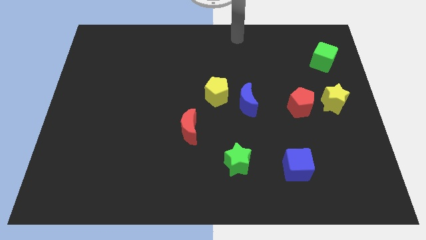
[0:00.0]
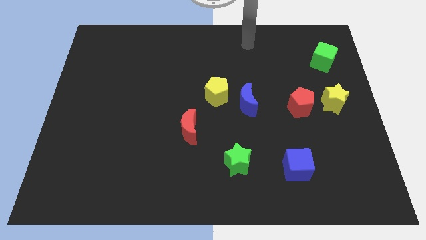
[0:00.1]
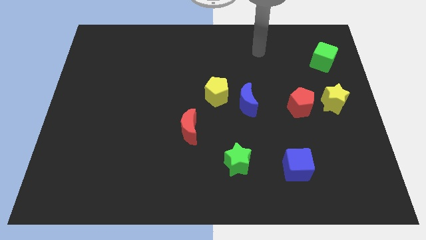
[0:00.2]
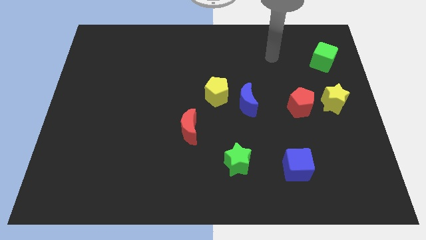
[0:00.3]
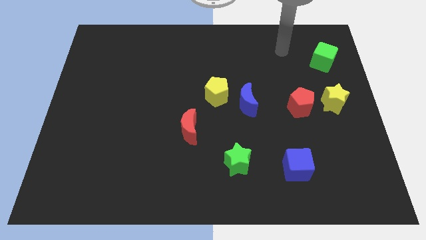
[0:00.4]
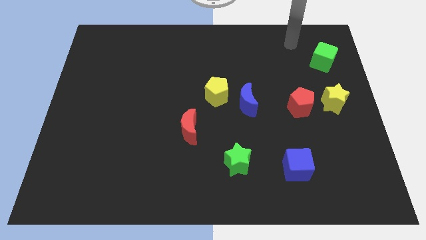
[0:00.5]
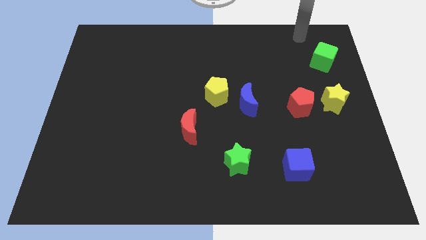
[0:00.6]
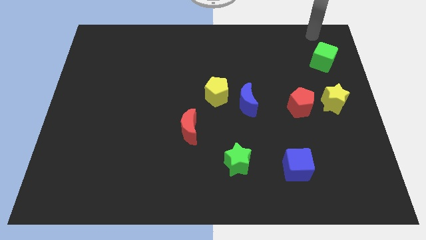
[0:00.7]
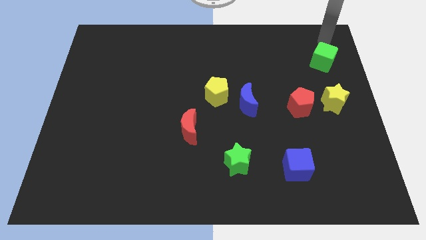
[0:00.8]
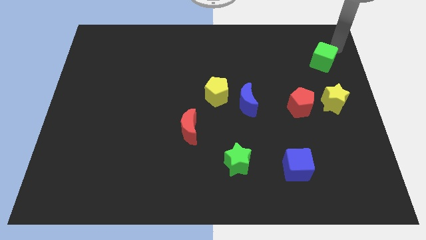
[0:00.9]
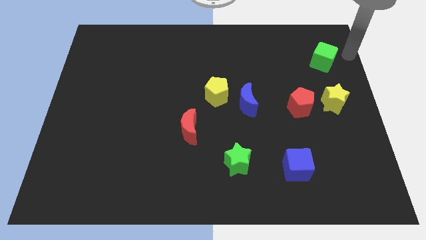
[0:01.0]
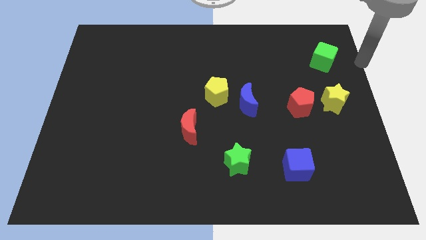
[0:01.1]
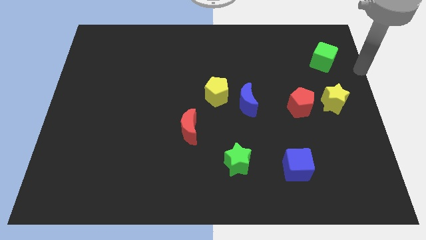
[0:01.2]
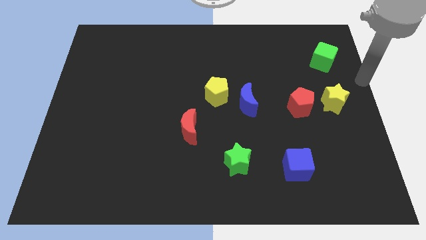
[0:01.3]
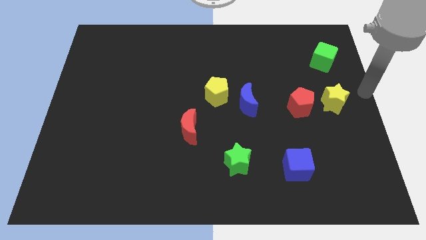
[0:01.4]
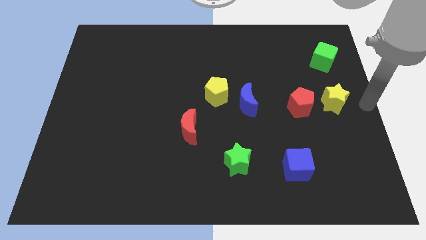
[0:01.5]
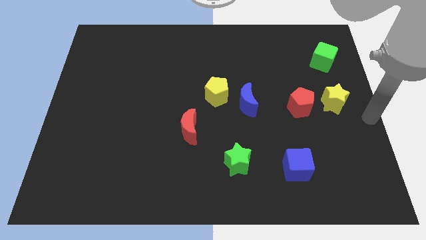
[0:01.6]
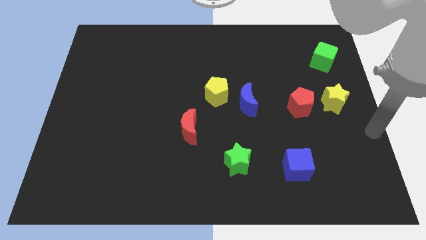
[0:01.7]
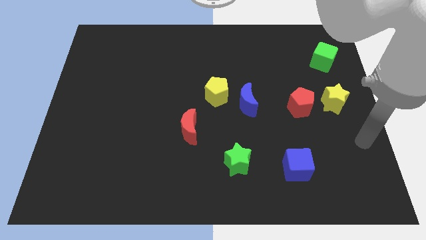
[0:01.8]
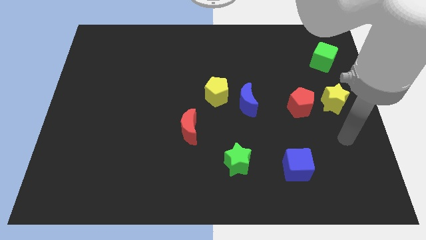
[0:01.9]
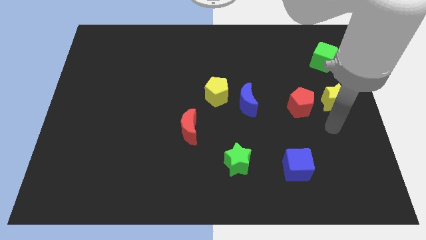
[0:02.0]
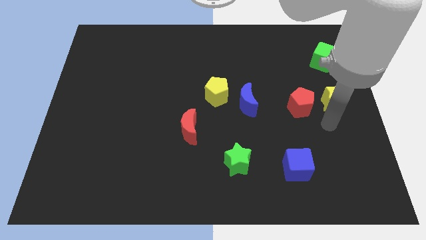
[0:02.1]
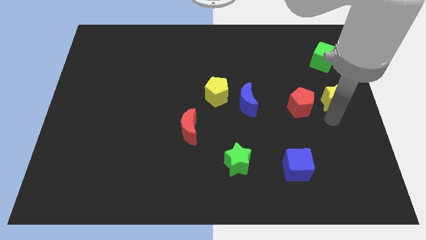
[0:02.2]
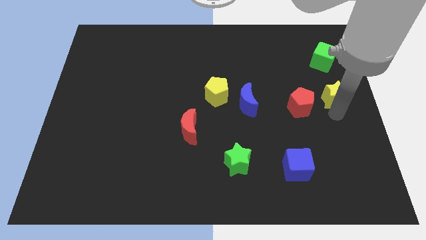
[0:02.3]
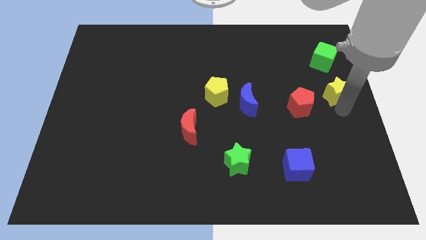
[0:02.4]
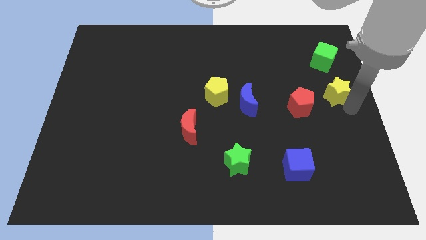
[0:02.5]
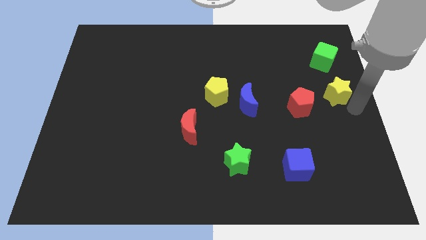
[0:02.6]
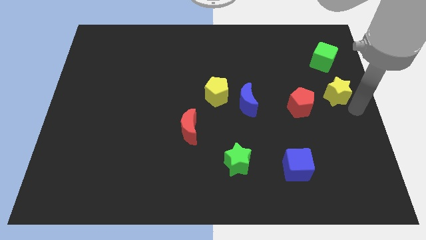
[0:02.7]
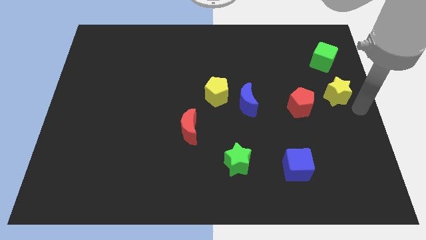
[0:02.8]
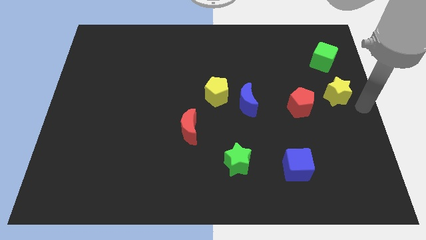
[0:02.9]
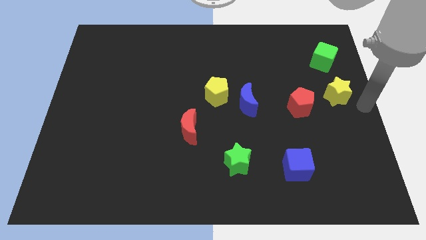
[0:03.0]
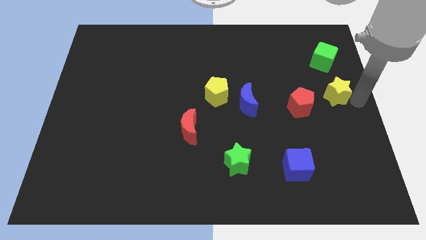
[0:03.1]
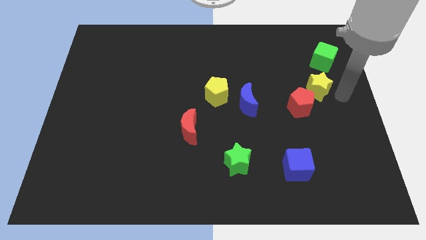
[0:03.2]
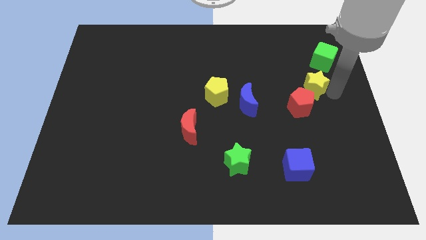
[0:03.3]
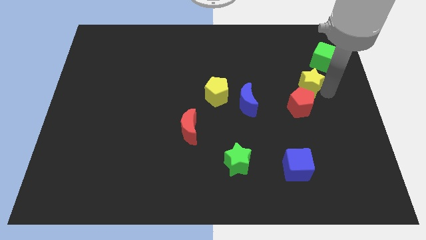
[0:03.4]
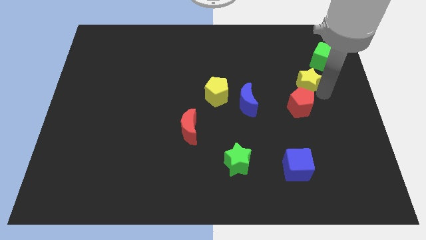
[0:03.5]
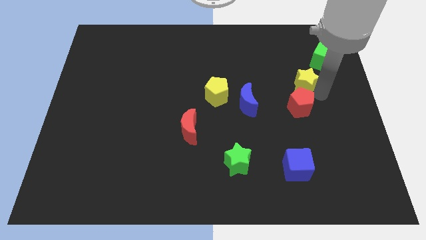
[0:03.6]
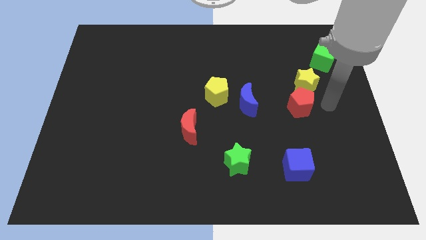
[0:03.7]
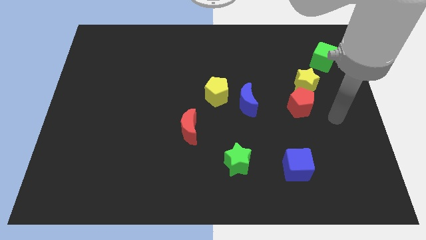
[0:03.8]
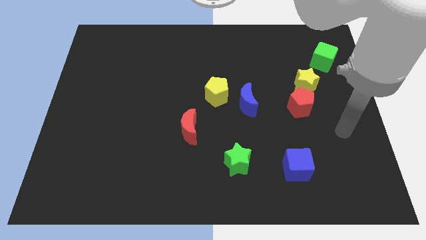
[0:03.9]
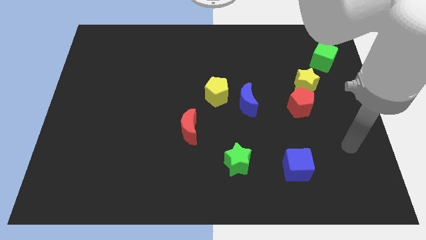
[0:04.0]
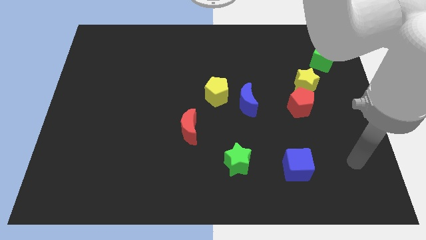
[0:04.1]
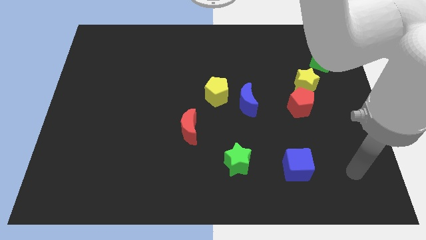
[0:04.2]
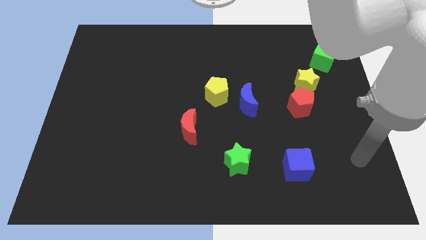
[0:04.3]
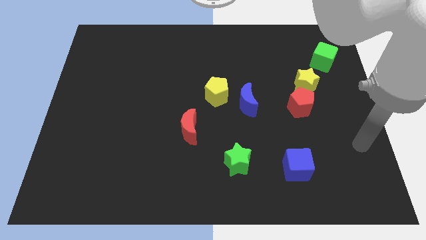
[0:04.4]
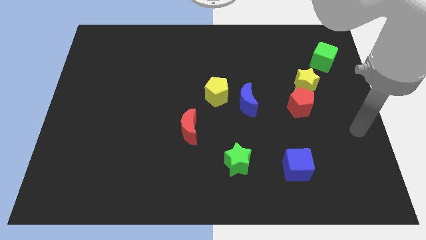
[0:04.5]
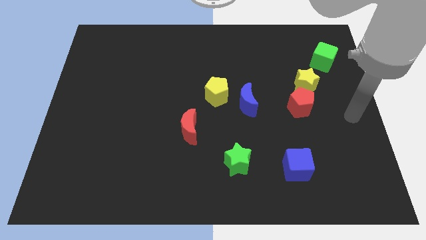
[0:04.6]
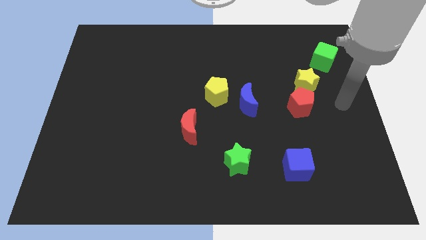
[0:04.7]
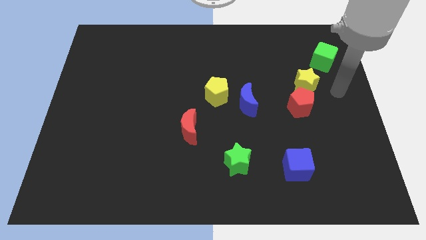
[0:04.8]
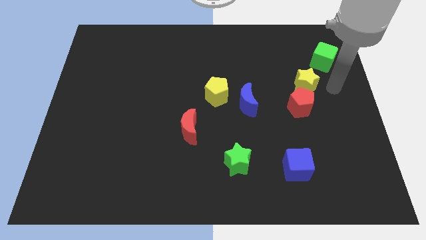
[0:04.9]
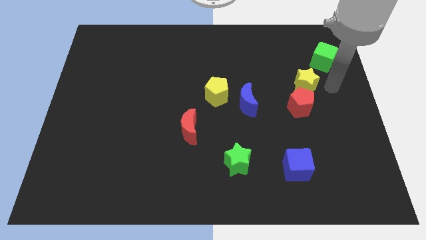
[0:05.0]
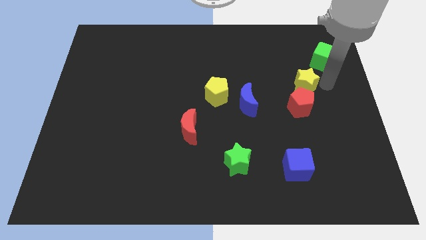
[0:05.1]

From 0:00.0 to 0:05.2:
put the yellow star in between the red pentagon and green cube

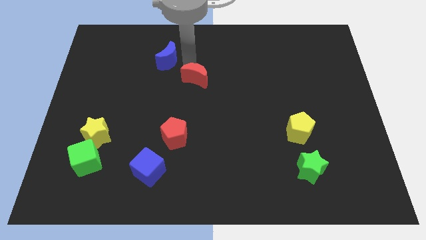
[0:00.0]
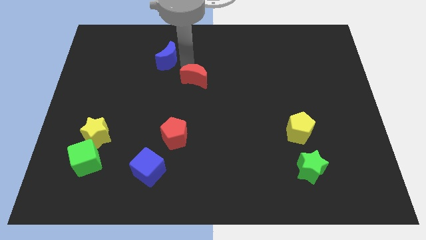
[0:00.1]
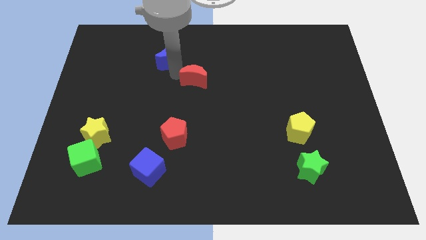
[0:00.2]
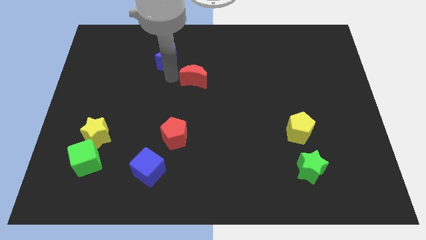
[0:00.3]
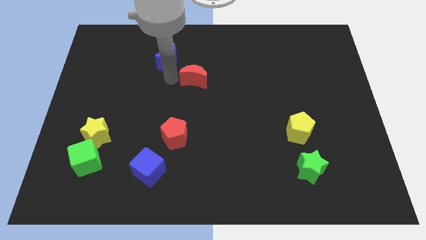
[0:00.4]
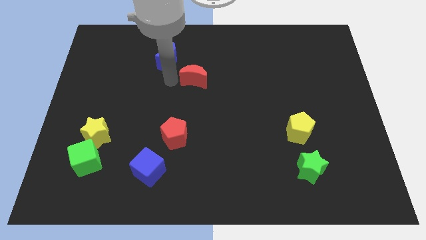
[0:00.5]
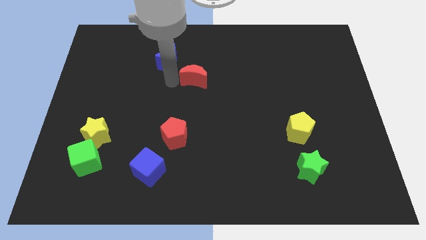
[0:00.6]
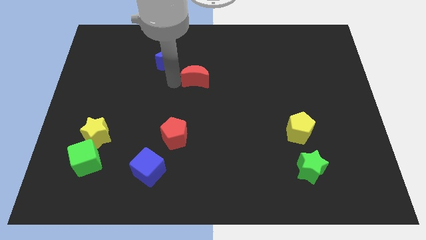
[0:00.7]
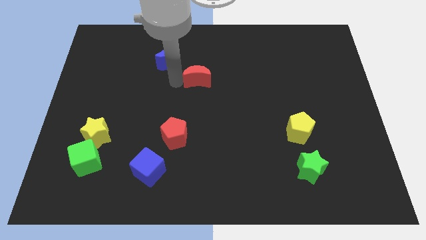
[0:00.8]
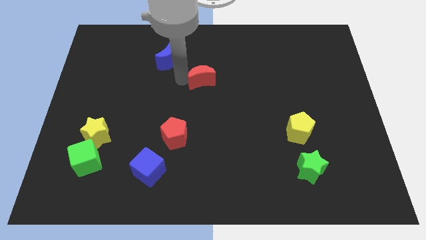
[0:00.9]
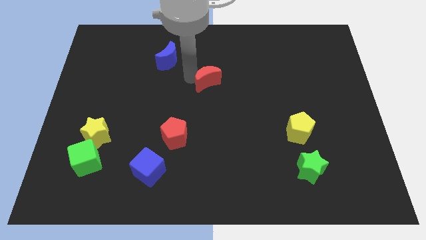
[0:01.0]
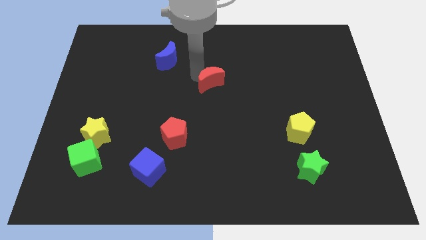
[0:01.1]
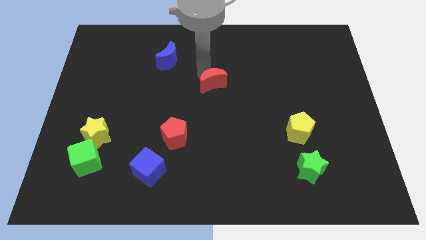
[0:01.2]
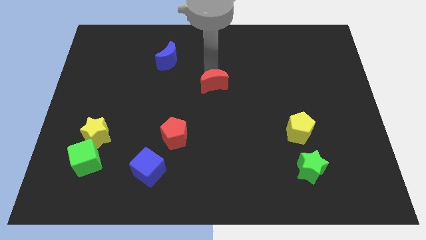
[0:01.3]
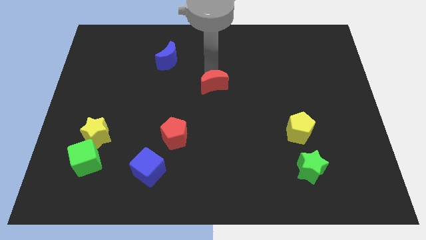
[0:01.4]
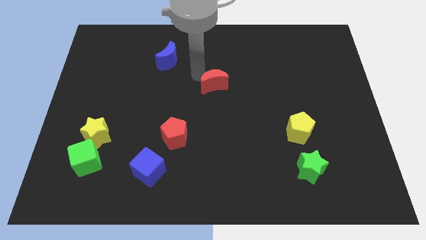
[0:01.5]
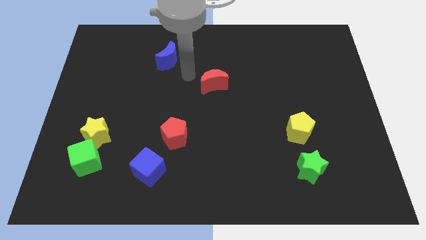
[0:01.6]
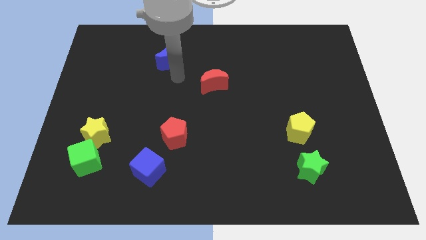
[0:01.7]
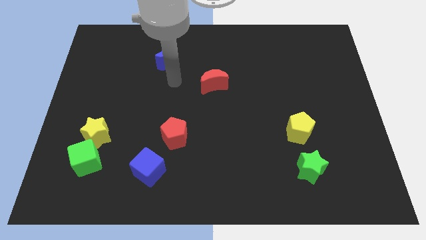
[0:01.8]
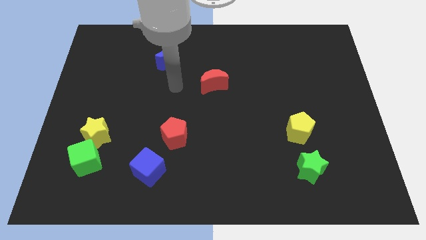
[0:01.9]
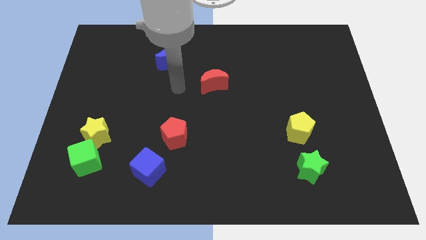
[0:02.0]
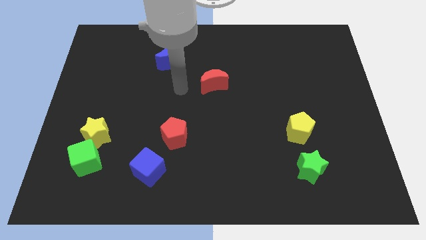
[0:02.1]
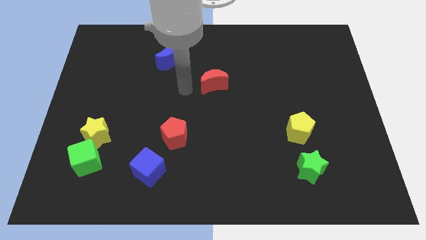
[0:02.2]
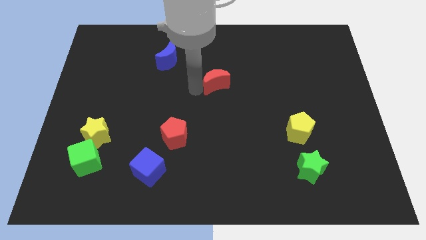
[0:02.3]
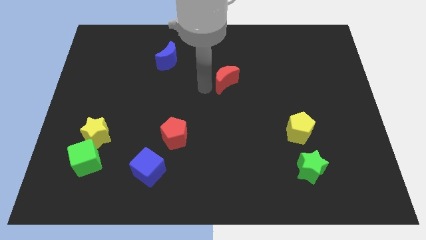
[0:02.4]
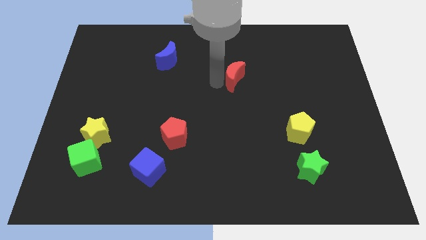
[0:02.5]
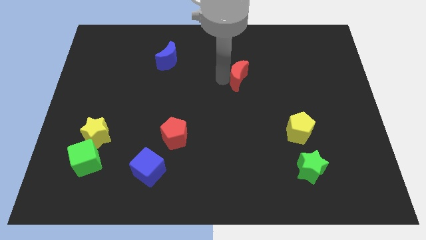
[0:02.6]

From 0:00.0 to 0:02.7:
separate red moon from blue crescent

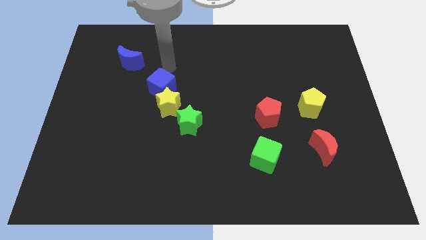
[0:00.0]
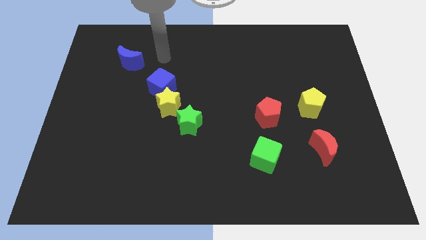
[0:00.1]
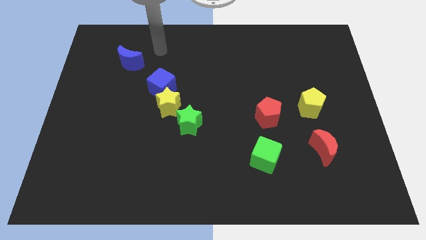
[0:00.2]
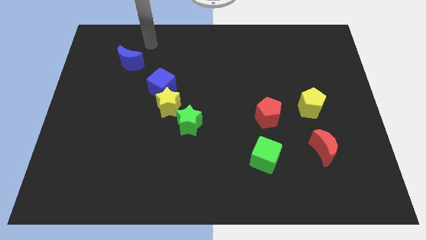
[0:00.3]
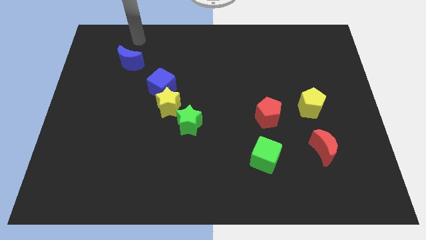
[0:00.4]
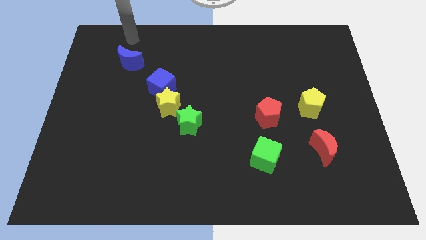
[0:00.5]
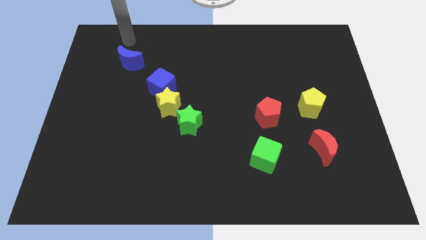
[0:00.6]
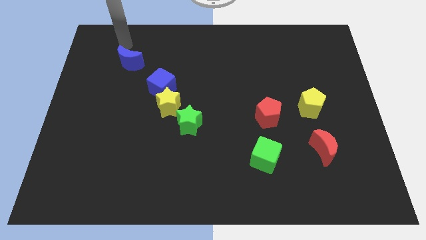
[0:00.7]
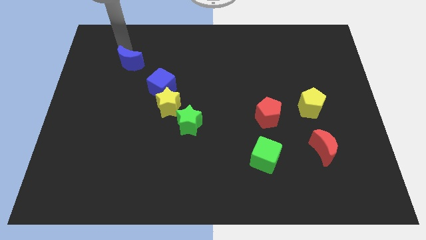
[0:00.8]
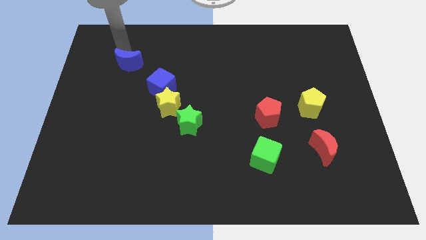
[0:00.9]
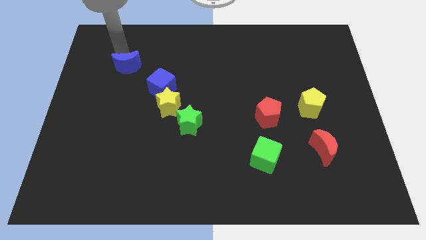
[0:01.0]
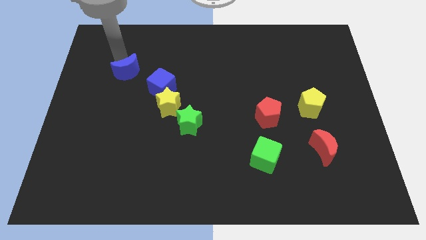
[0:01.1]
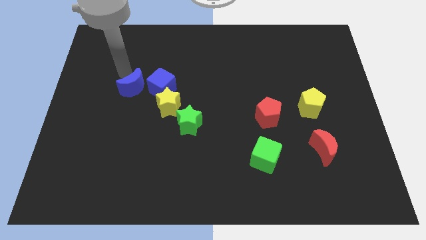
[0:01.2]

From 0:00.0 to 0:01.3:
place blue moon to the left of blue cube
